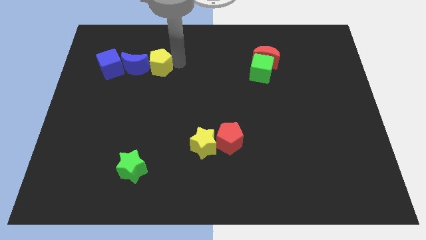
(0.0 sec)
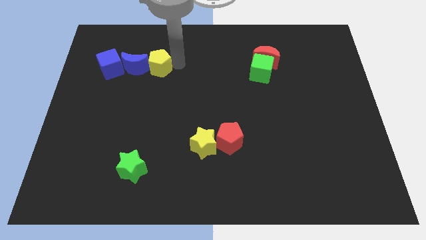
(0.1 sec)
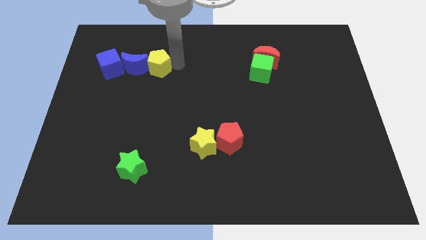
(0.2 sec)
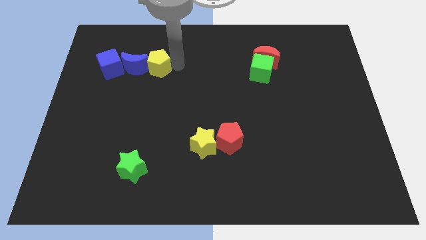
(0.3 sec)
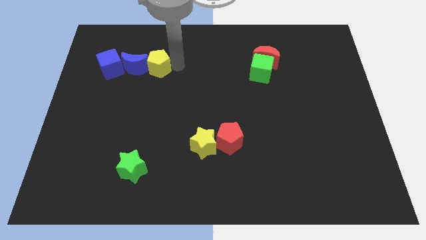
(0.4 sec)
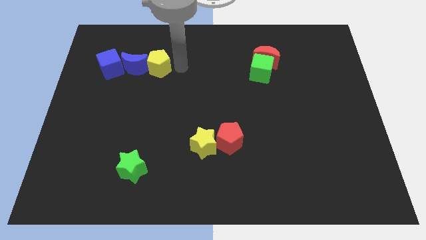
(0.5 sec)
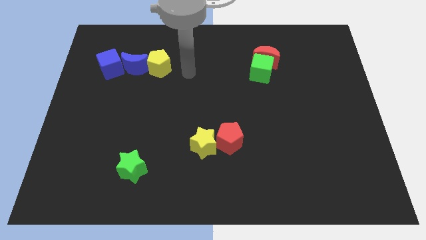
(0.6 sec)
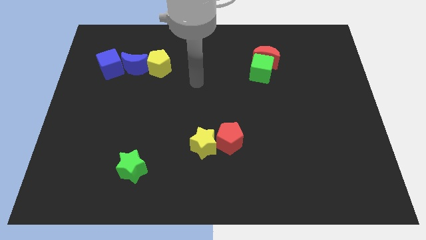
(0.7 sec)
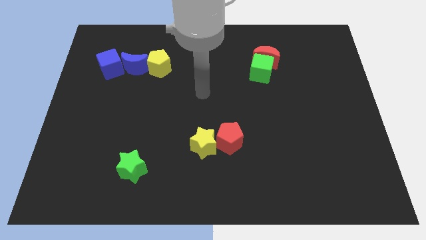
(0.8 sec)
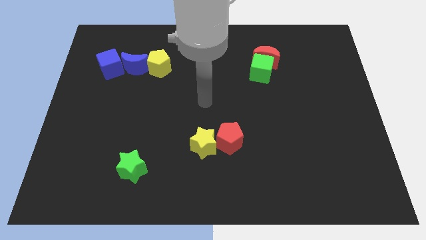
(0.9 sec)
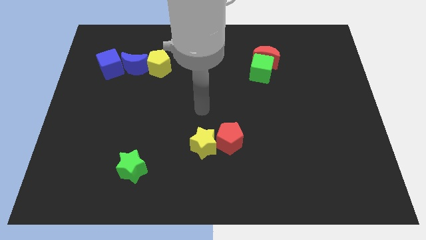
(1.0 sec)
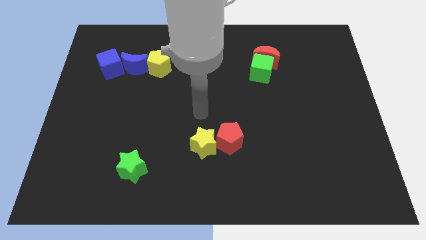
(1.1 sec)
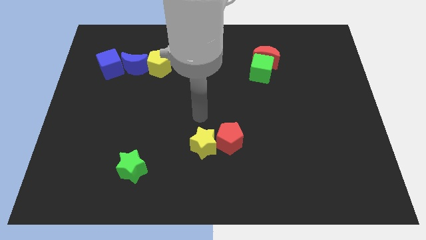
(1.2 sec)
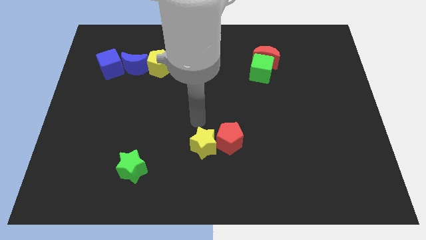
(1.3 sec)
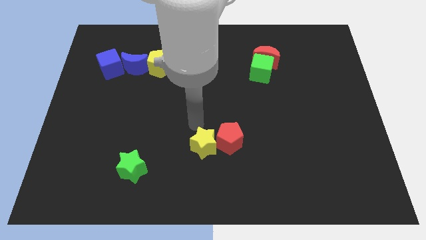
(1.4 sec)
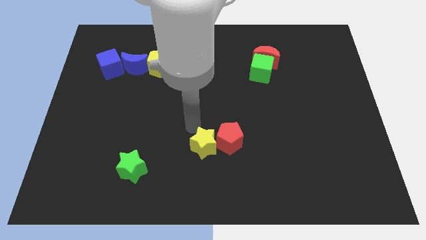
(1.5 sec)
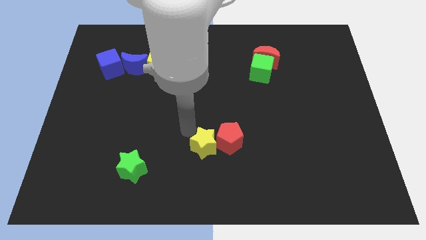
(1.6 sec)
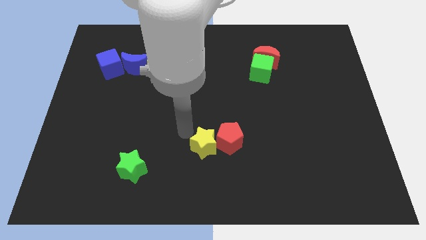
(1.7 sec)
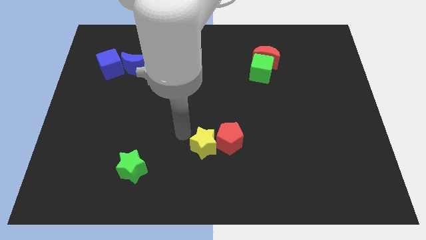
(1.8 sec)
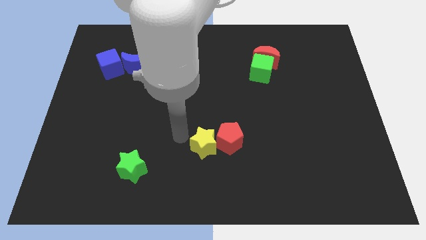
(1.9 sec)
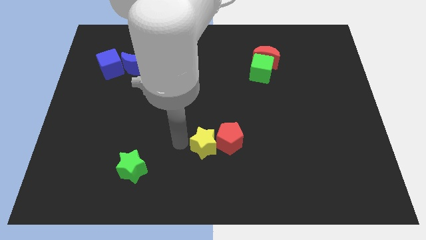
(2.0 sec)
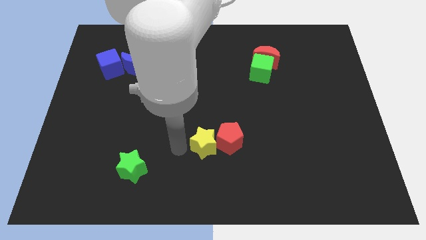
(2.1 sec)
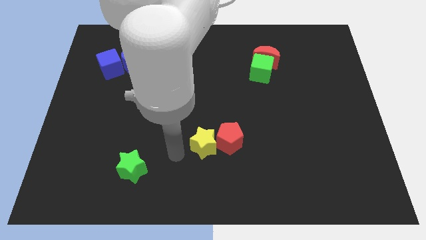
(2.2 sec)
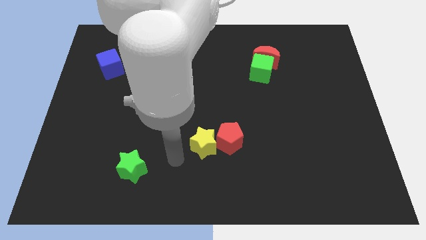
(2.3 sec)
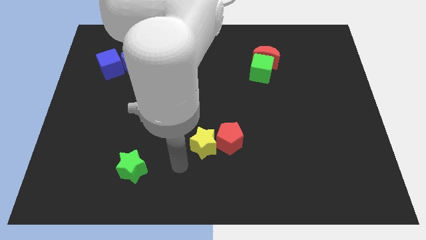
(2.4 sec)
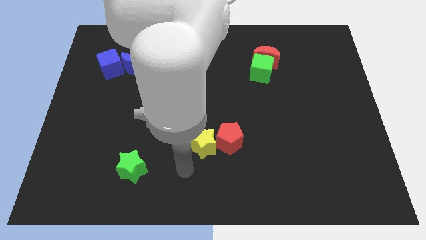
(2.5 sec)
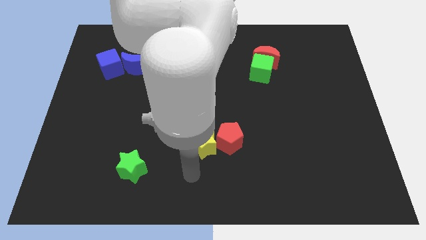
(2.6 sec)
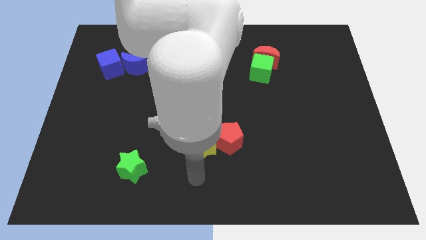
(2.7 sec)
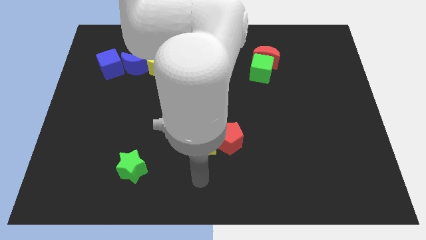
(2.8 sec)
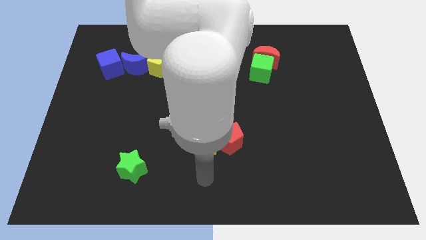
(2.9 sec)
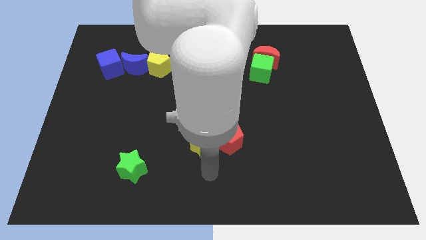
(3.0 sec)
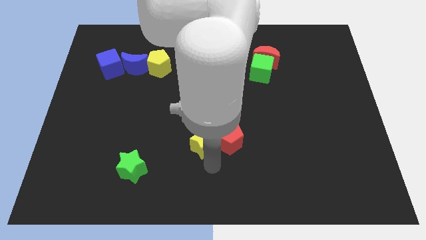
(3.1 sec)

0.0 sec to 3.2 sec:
push your arm at the bottom of the yellow star

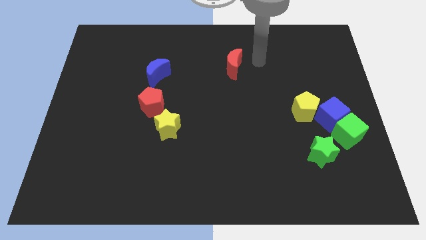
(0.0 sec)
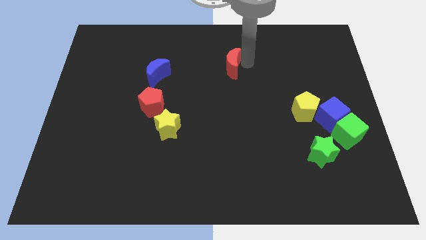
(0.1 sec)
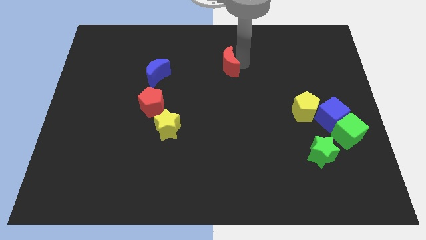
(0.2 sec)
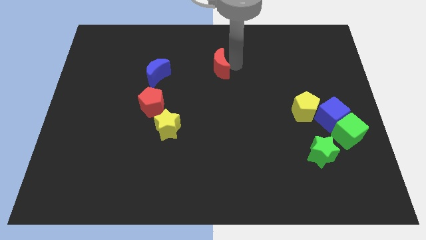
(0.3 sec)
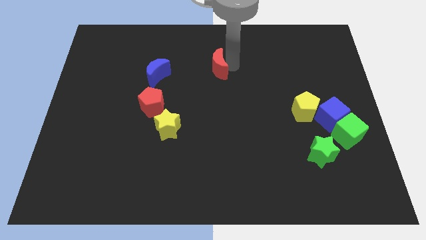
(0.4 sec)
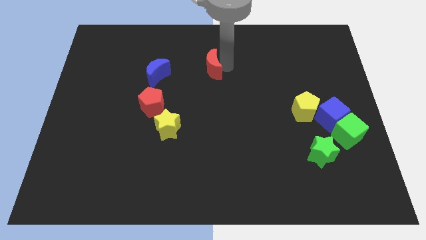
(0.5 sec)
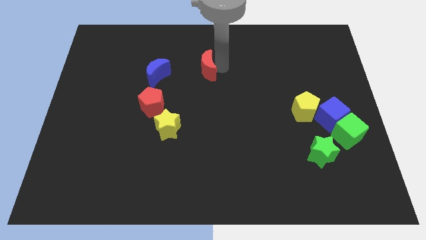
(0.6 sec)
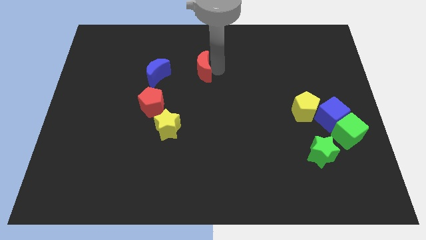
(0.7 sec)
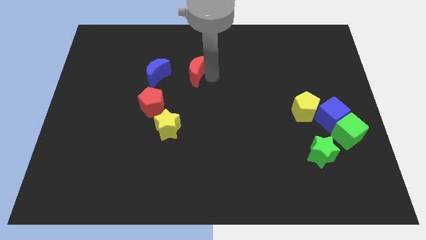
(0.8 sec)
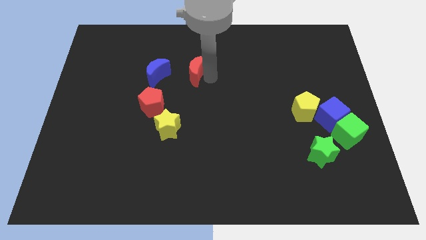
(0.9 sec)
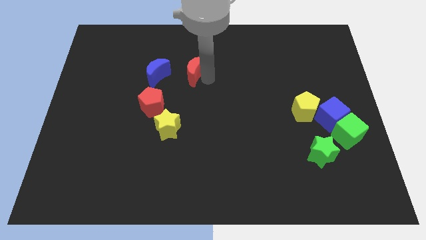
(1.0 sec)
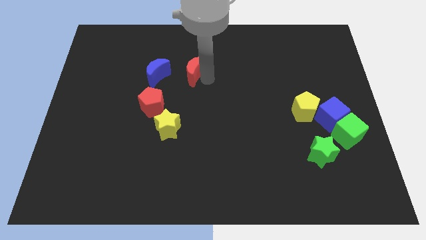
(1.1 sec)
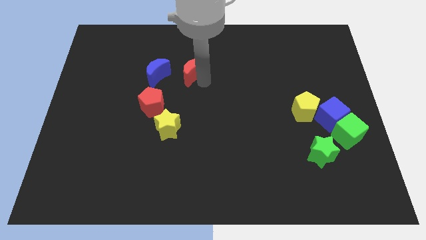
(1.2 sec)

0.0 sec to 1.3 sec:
push the red crescent towards the blue crescent

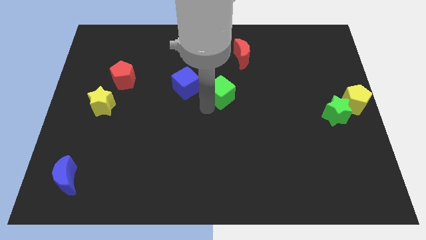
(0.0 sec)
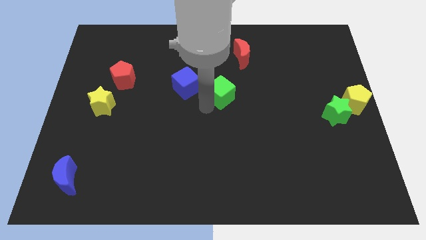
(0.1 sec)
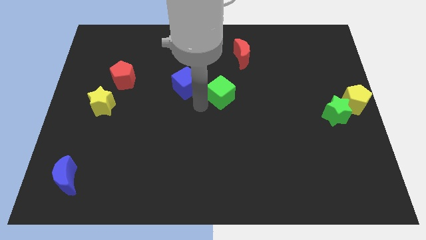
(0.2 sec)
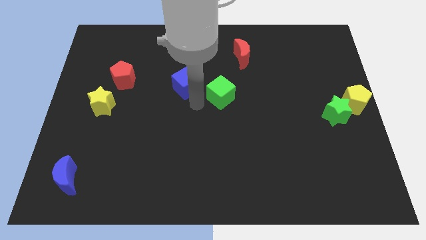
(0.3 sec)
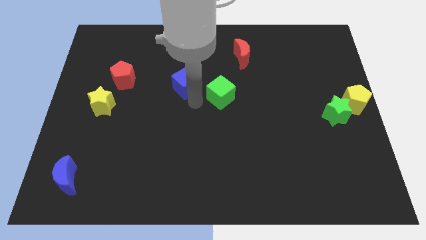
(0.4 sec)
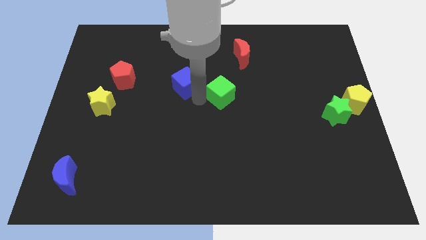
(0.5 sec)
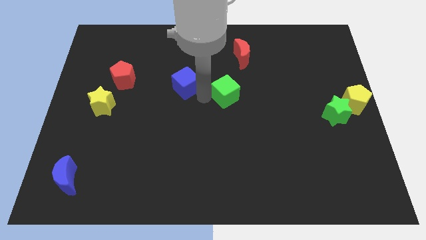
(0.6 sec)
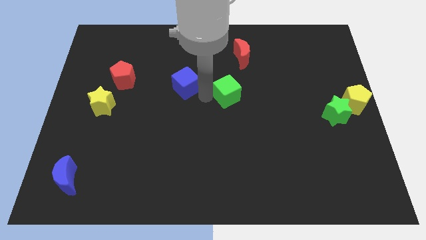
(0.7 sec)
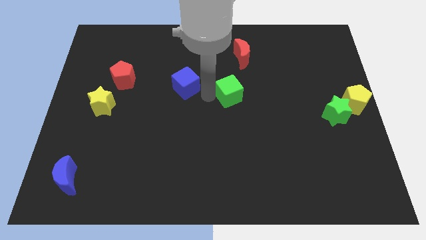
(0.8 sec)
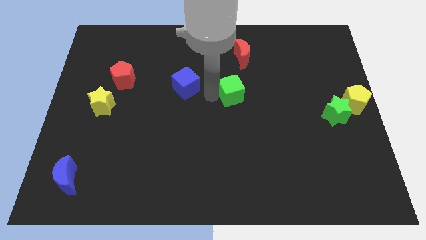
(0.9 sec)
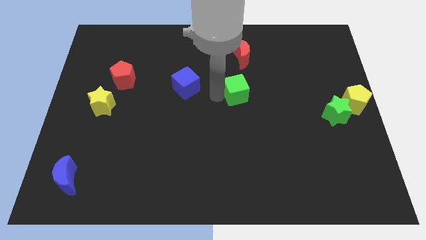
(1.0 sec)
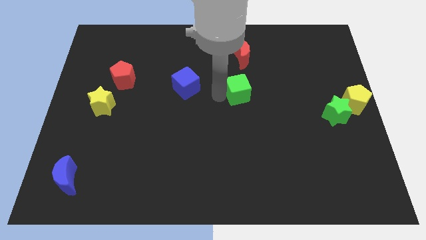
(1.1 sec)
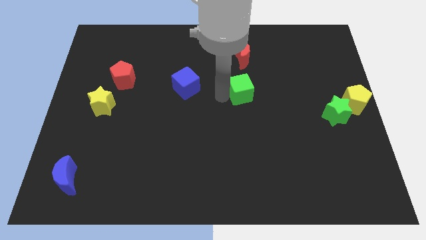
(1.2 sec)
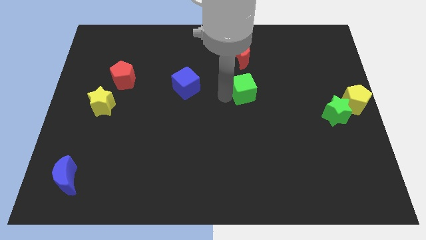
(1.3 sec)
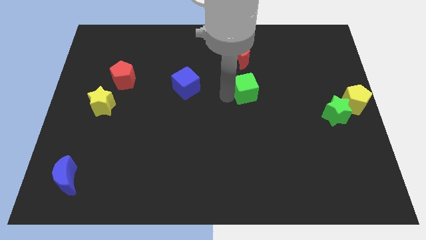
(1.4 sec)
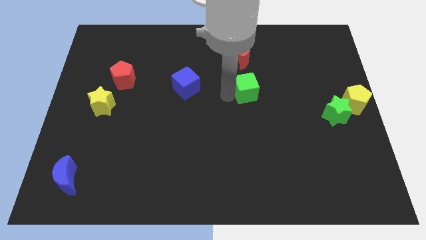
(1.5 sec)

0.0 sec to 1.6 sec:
push the green cube towards left

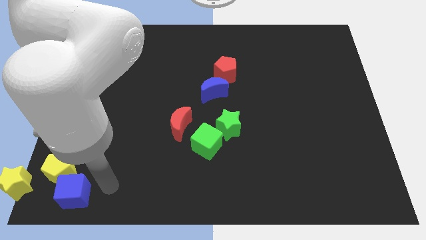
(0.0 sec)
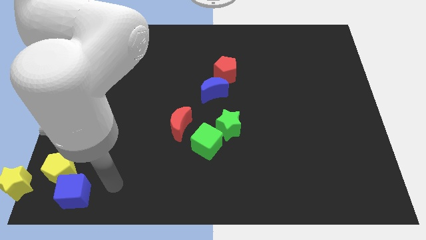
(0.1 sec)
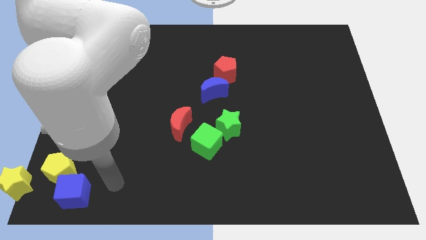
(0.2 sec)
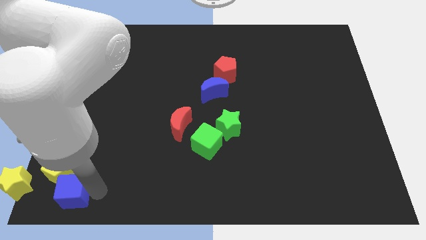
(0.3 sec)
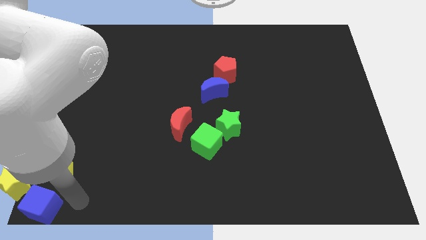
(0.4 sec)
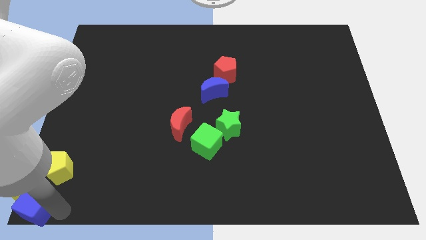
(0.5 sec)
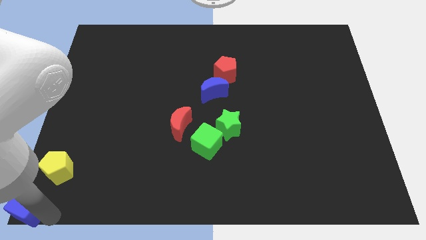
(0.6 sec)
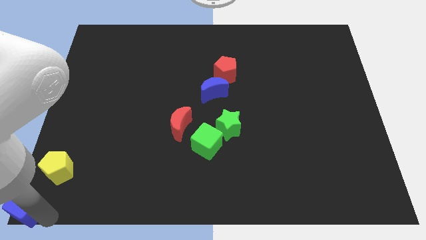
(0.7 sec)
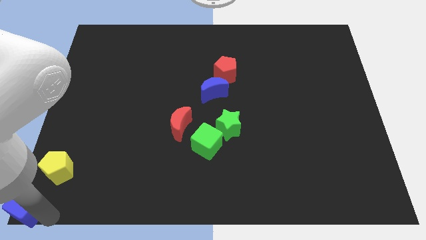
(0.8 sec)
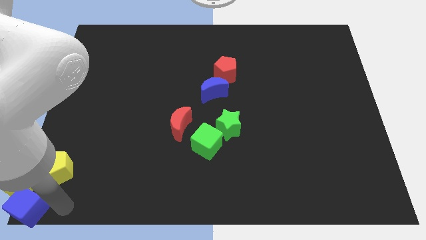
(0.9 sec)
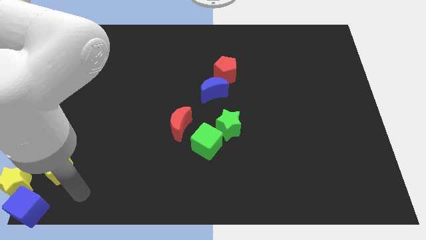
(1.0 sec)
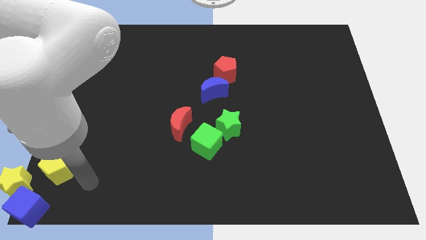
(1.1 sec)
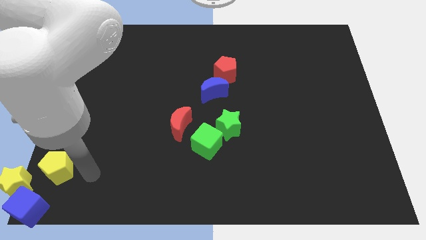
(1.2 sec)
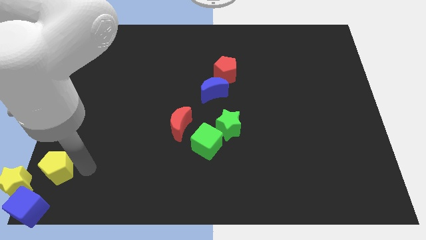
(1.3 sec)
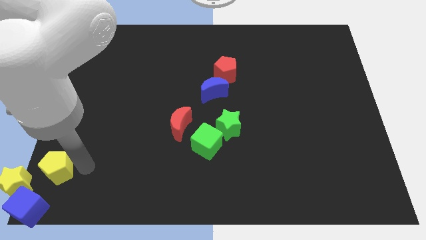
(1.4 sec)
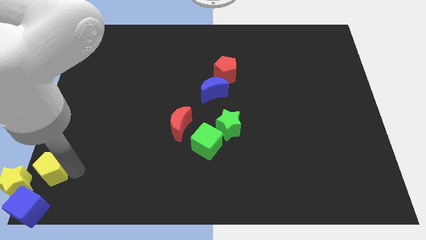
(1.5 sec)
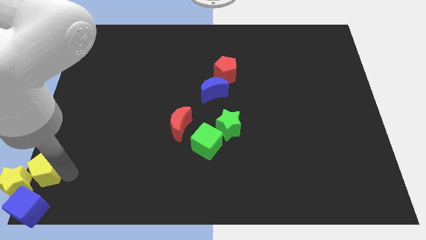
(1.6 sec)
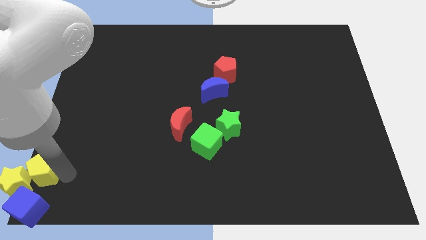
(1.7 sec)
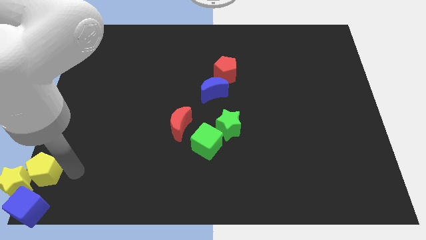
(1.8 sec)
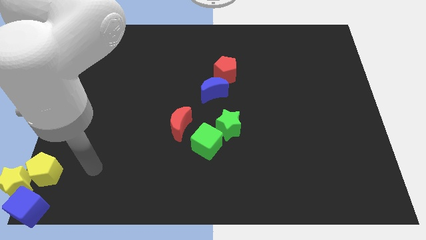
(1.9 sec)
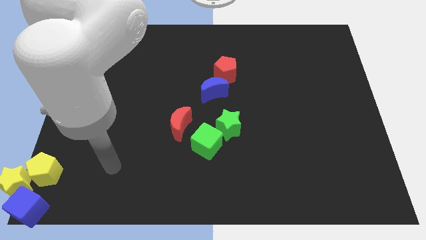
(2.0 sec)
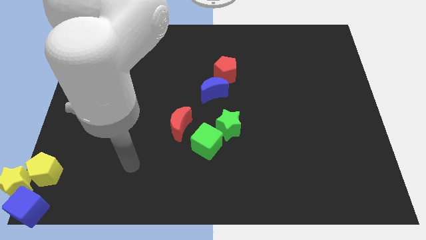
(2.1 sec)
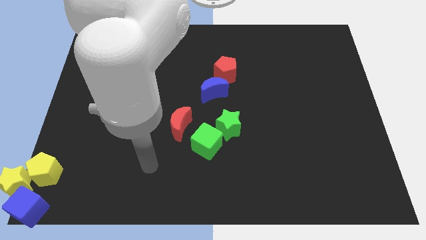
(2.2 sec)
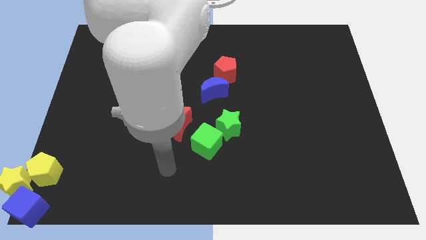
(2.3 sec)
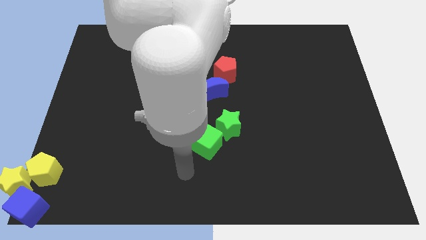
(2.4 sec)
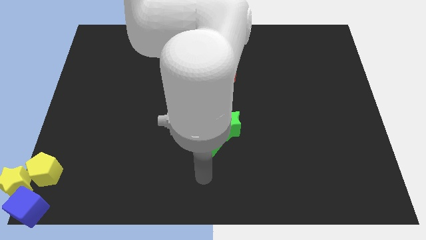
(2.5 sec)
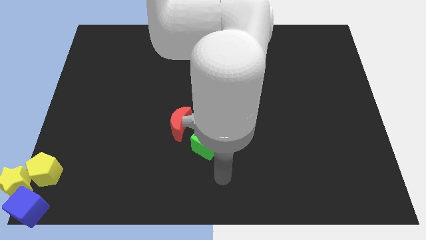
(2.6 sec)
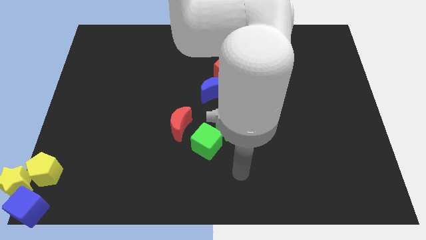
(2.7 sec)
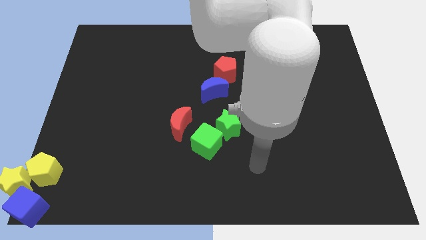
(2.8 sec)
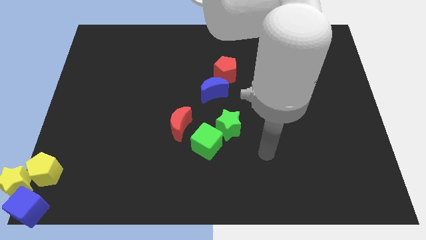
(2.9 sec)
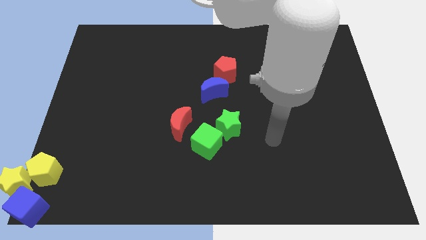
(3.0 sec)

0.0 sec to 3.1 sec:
push the blue cube and yellow pentagon into the yellow star
